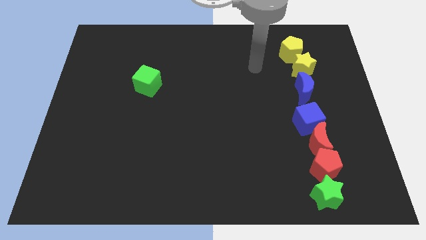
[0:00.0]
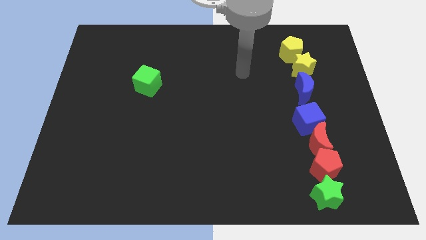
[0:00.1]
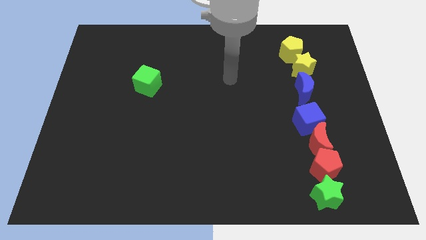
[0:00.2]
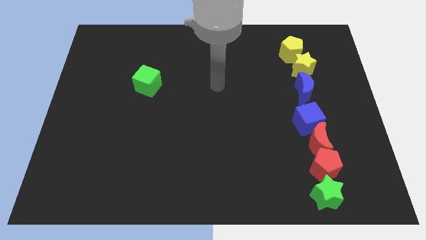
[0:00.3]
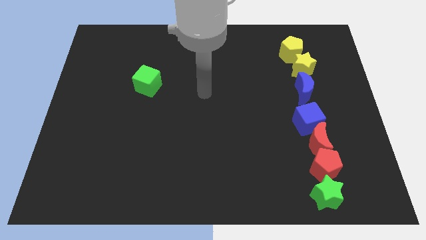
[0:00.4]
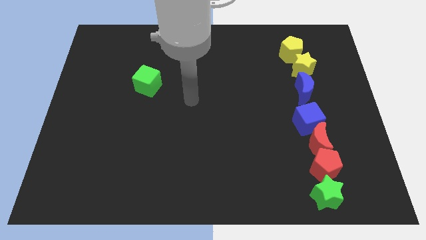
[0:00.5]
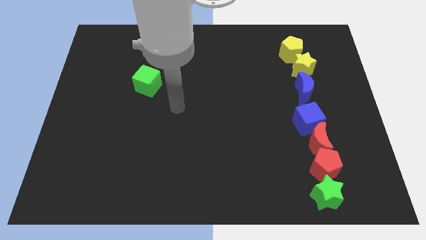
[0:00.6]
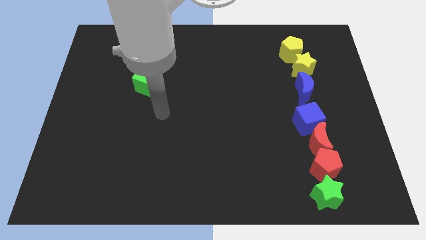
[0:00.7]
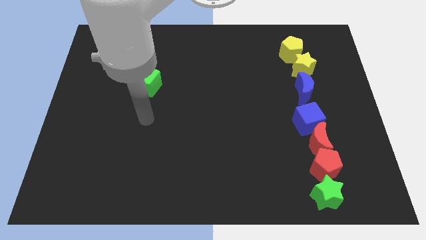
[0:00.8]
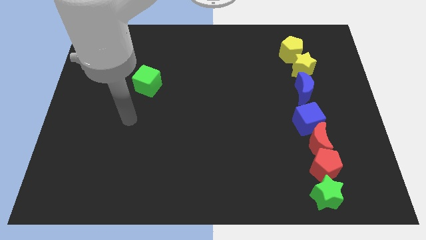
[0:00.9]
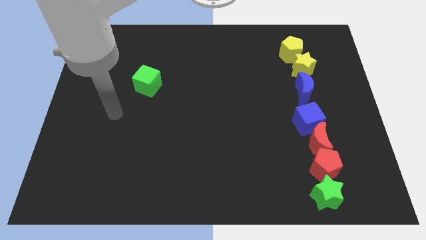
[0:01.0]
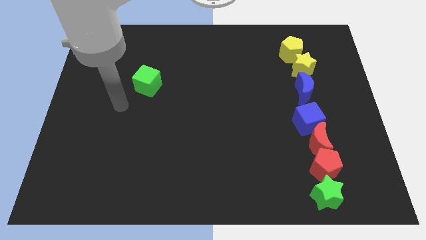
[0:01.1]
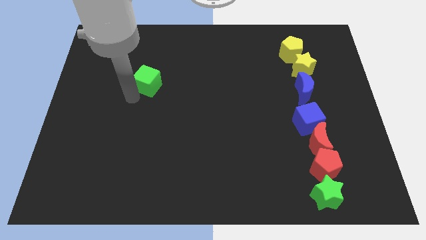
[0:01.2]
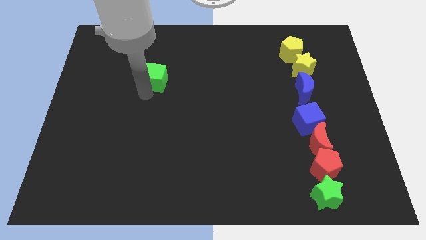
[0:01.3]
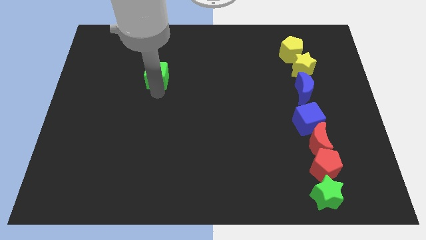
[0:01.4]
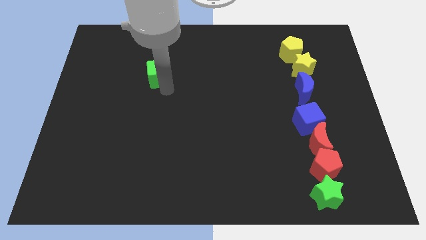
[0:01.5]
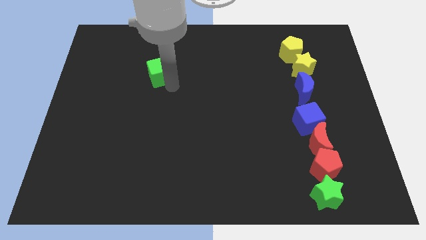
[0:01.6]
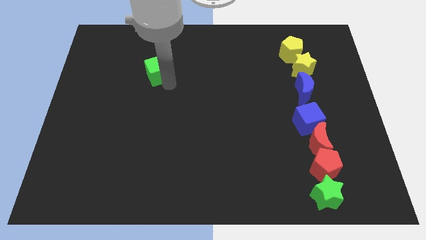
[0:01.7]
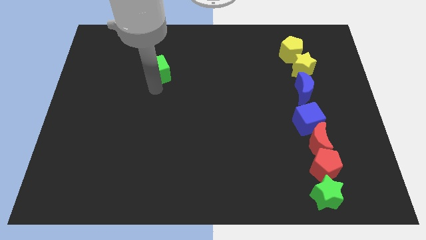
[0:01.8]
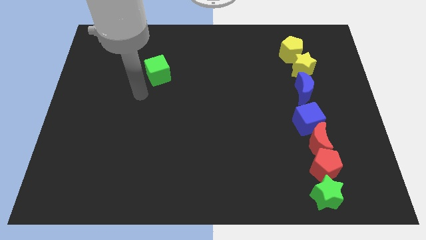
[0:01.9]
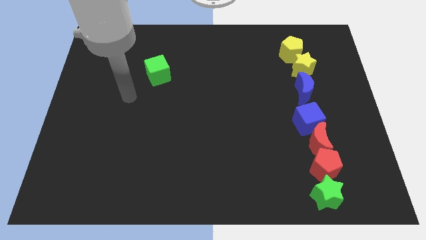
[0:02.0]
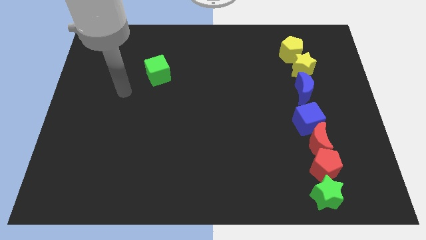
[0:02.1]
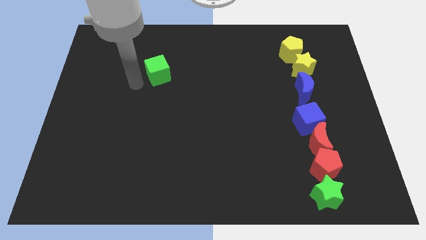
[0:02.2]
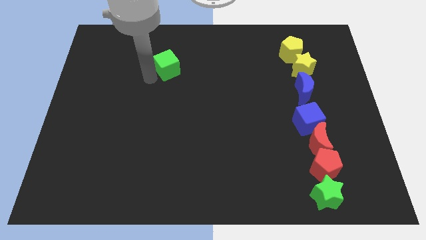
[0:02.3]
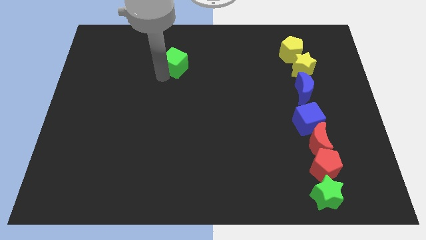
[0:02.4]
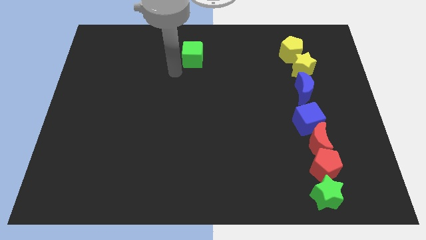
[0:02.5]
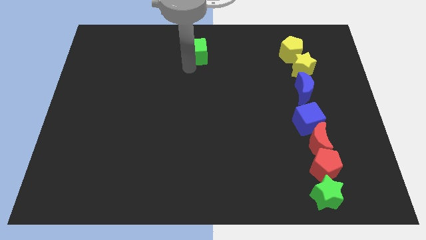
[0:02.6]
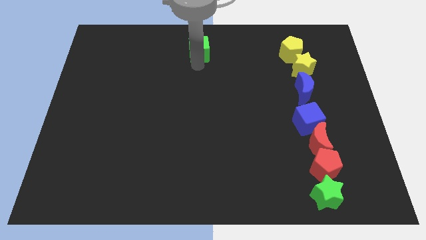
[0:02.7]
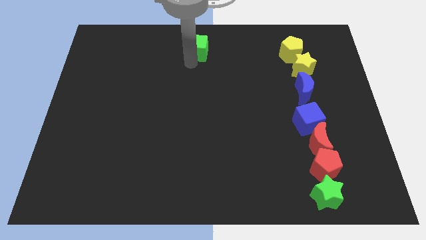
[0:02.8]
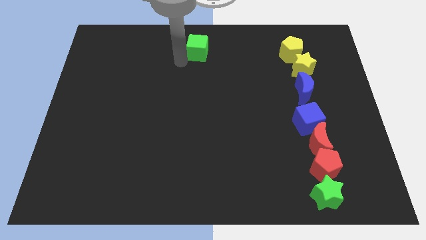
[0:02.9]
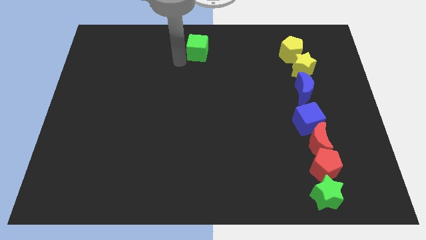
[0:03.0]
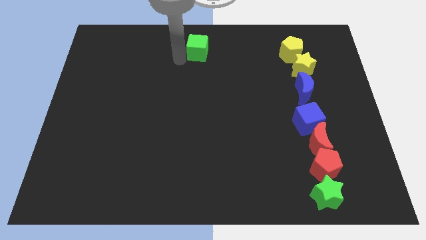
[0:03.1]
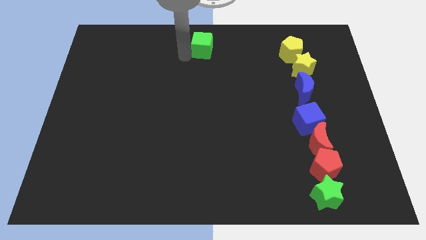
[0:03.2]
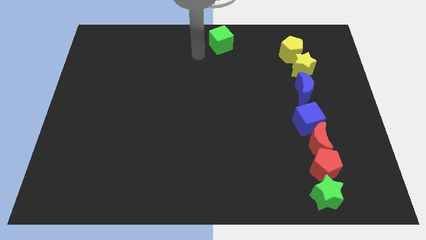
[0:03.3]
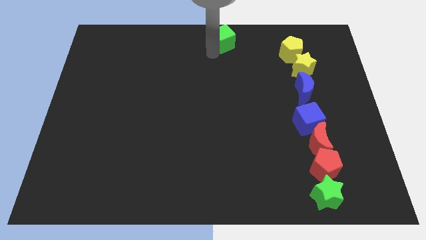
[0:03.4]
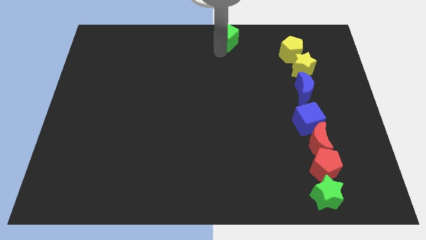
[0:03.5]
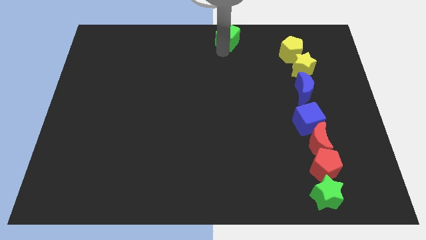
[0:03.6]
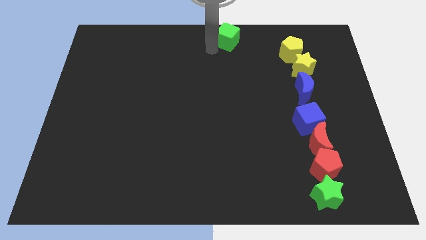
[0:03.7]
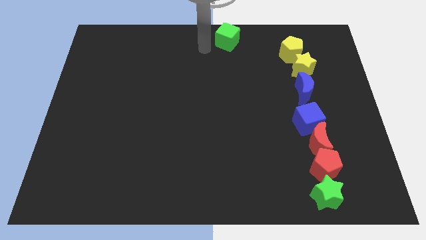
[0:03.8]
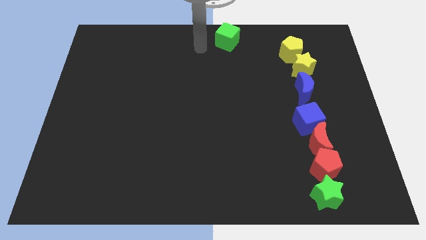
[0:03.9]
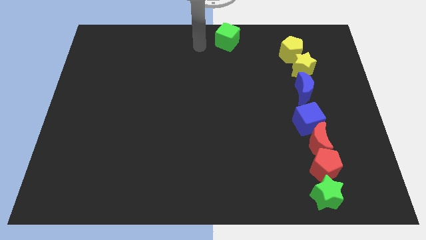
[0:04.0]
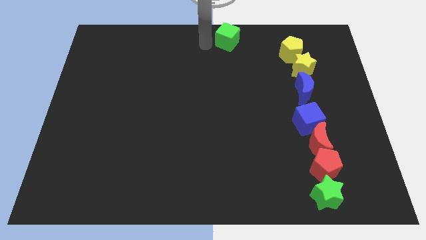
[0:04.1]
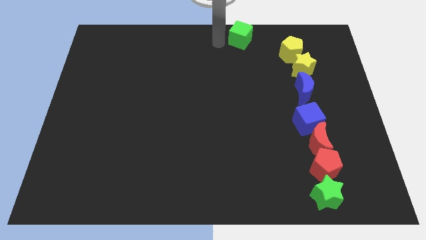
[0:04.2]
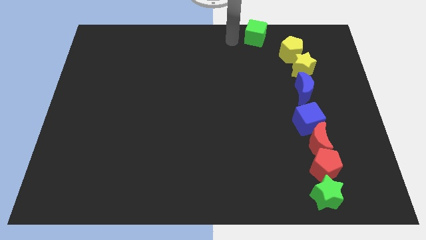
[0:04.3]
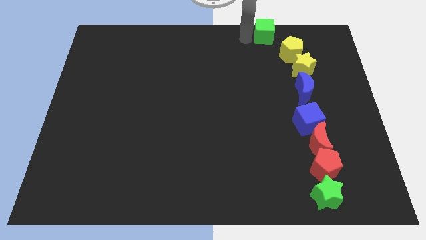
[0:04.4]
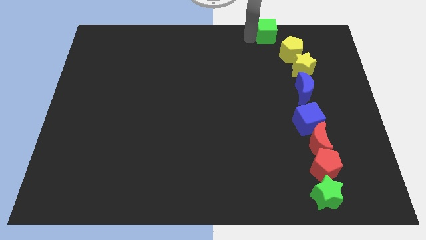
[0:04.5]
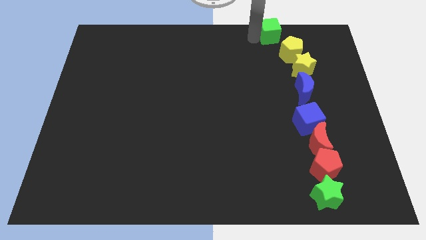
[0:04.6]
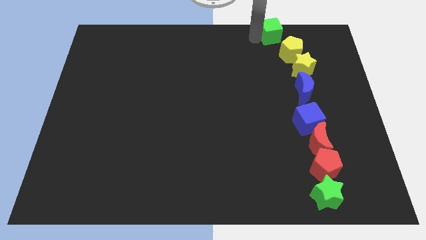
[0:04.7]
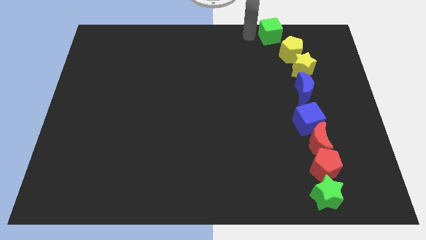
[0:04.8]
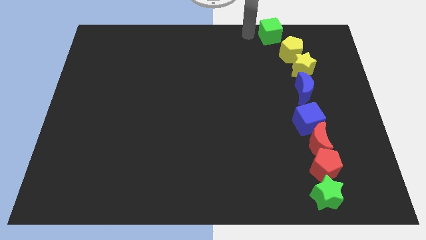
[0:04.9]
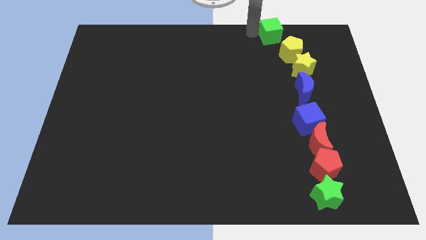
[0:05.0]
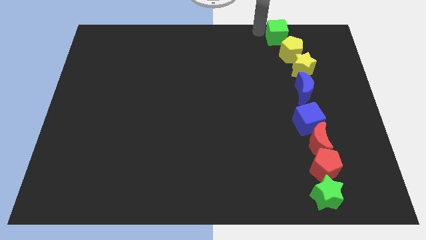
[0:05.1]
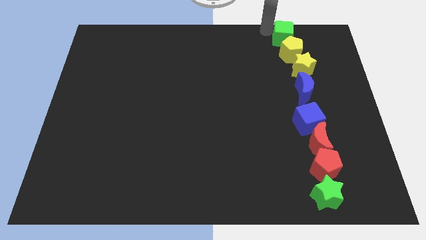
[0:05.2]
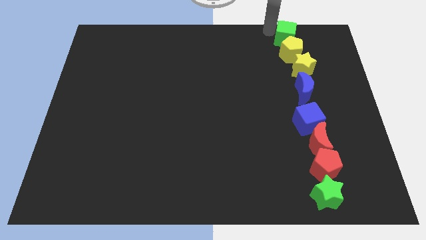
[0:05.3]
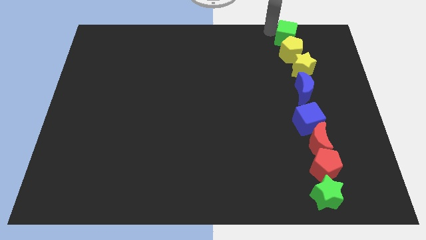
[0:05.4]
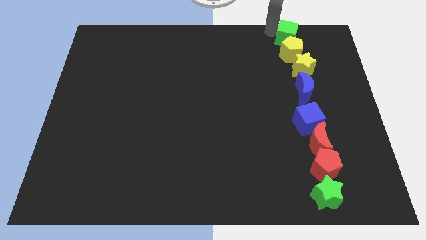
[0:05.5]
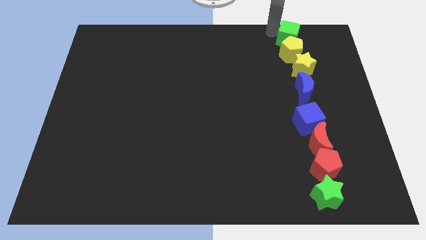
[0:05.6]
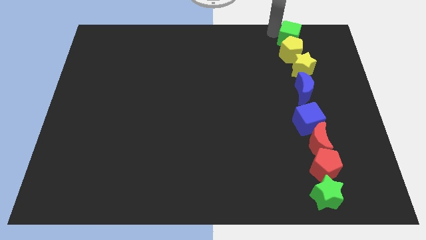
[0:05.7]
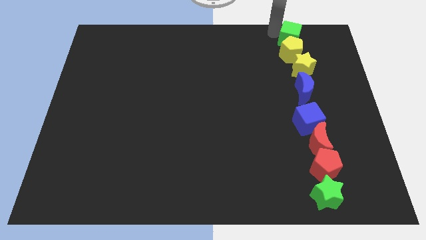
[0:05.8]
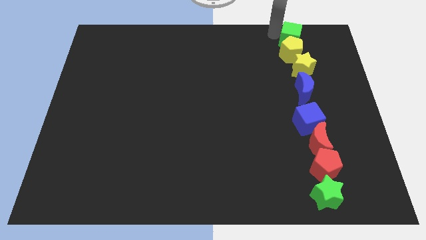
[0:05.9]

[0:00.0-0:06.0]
move the green cube to the top of the yellow pentagon

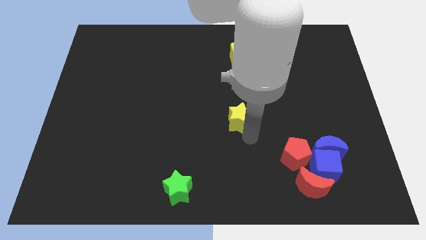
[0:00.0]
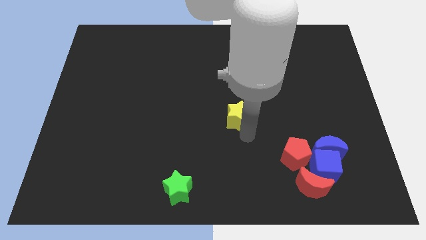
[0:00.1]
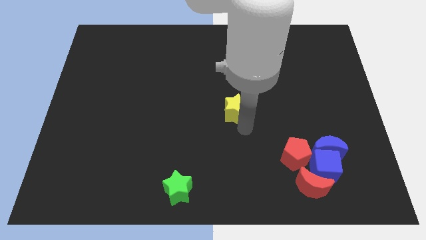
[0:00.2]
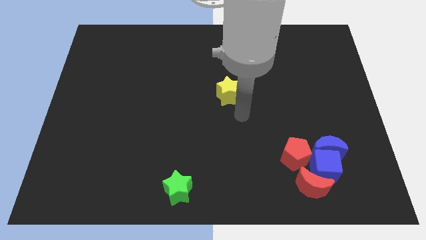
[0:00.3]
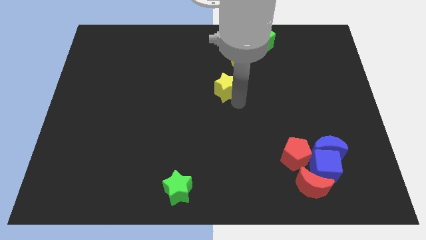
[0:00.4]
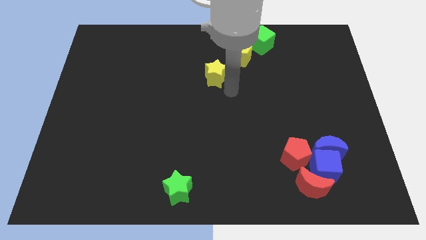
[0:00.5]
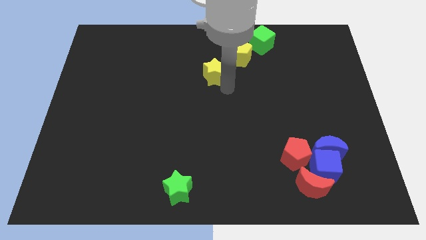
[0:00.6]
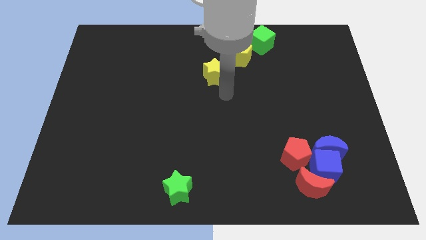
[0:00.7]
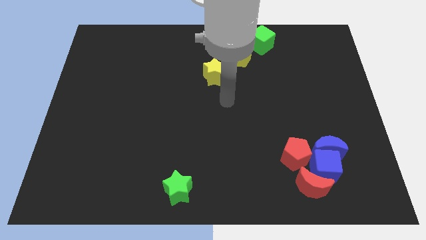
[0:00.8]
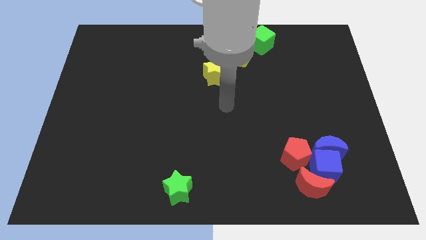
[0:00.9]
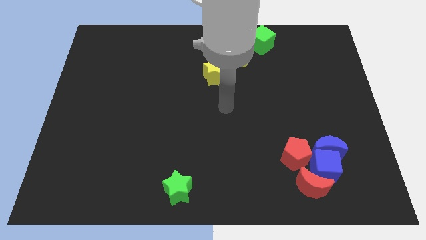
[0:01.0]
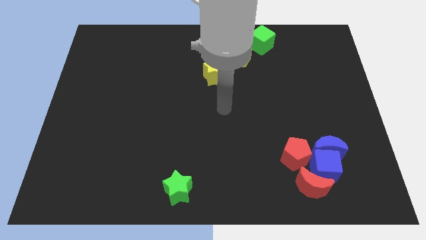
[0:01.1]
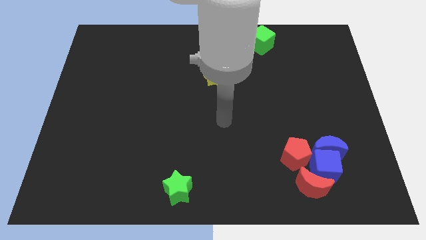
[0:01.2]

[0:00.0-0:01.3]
slide the yellow star to the bottom left side of the yellow pentagon

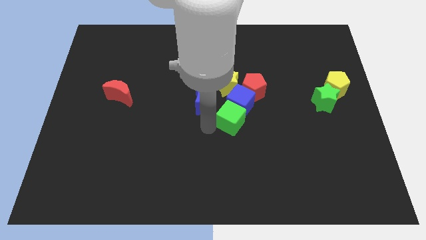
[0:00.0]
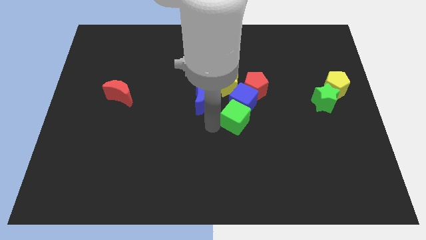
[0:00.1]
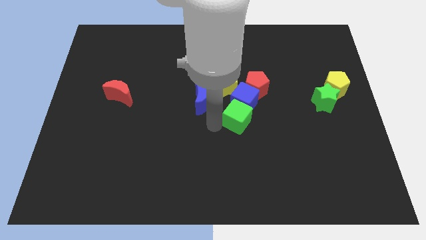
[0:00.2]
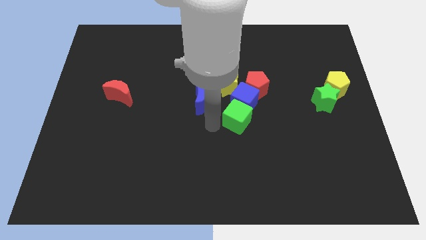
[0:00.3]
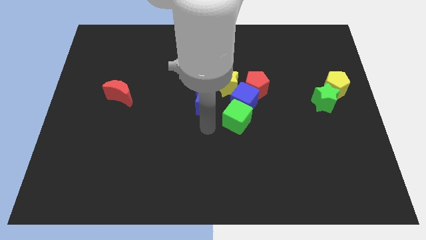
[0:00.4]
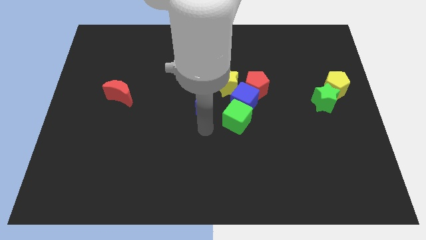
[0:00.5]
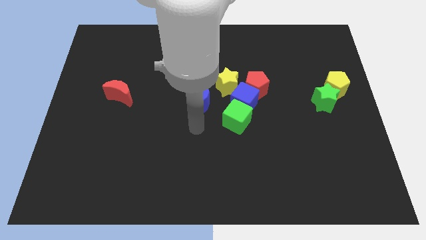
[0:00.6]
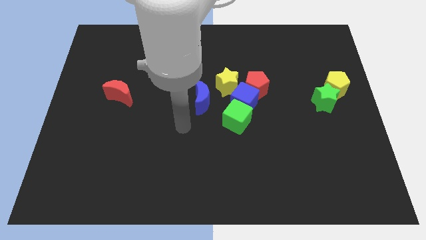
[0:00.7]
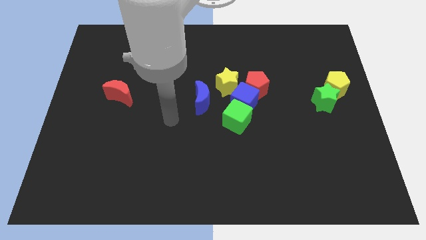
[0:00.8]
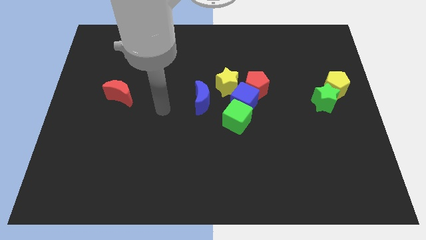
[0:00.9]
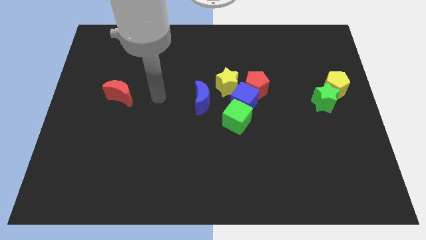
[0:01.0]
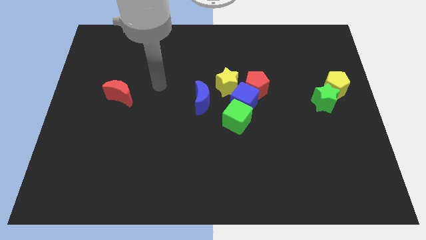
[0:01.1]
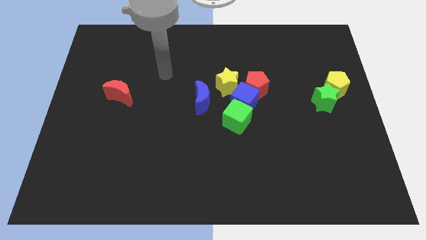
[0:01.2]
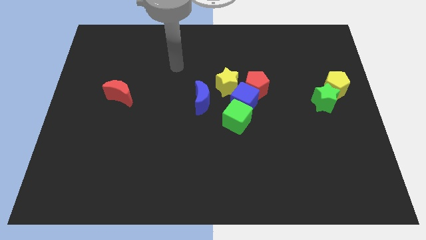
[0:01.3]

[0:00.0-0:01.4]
move arm away from the blocks

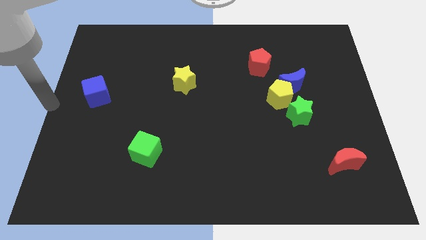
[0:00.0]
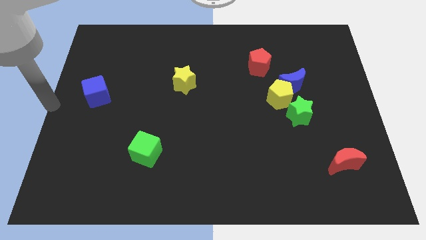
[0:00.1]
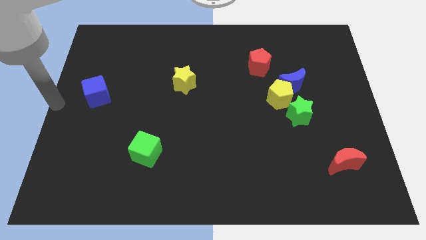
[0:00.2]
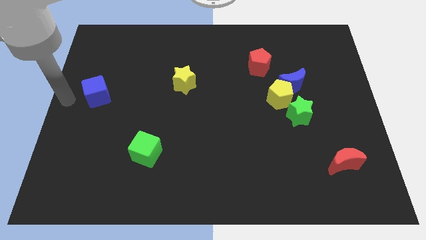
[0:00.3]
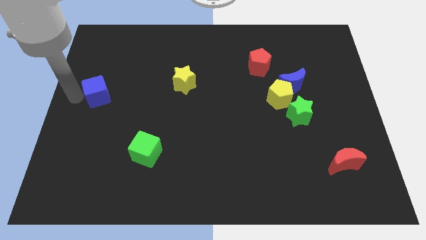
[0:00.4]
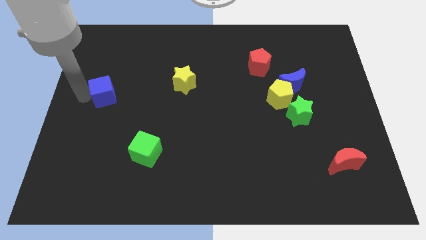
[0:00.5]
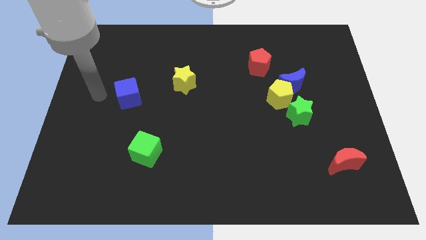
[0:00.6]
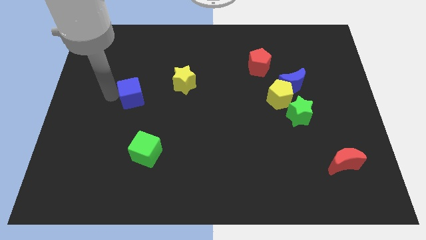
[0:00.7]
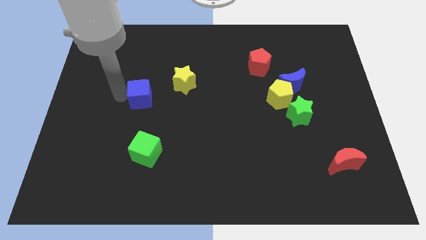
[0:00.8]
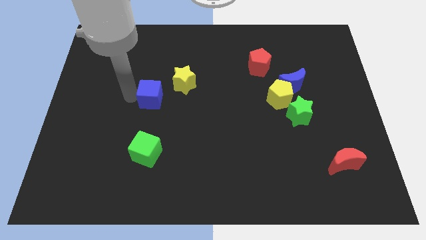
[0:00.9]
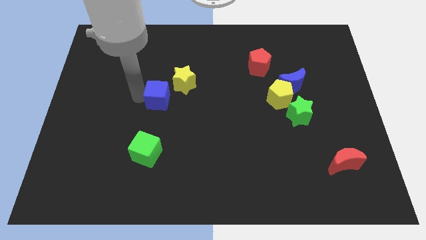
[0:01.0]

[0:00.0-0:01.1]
slide the blue cube to the top of green cube
